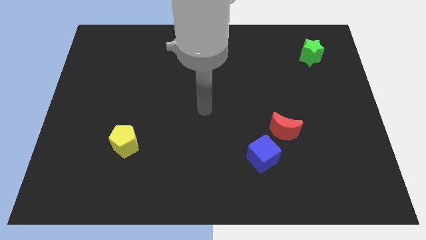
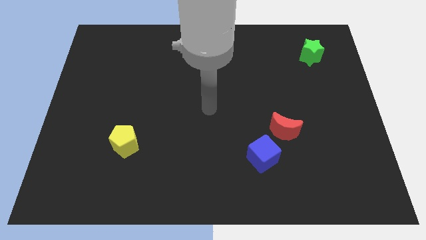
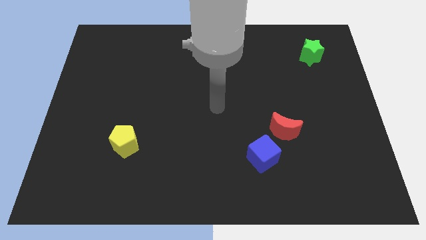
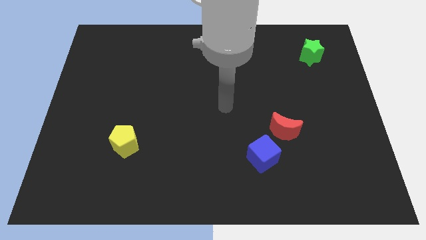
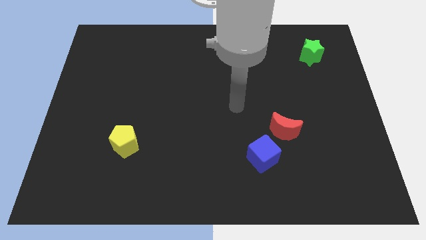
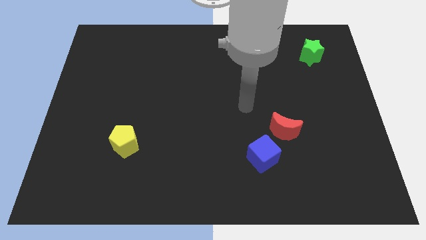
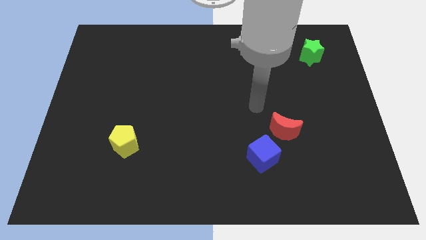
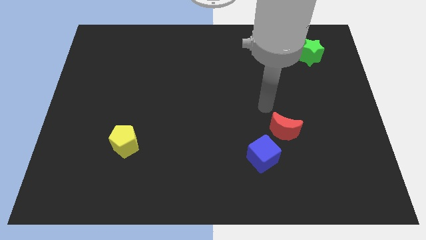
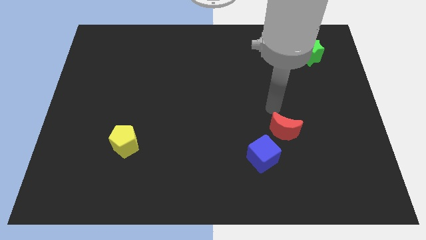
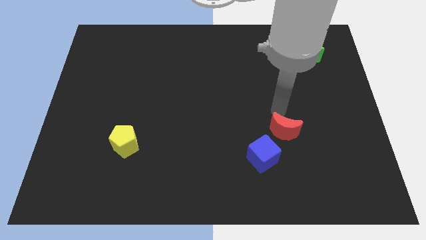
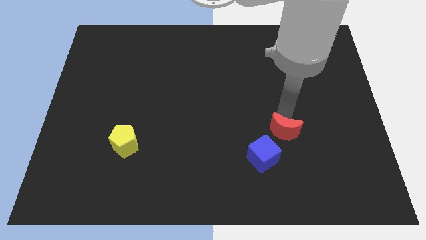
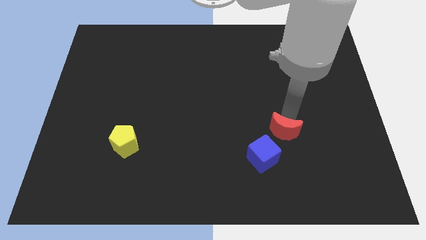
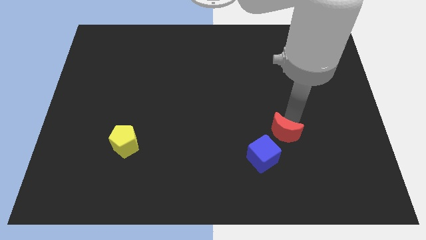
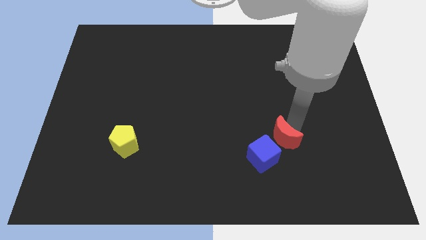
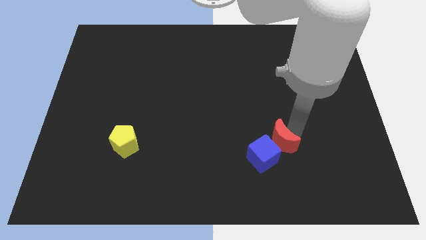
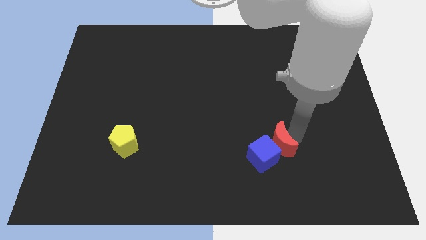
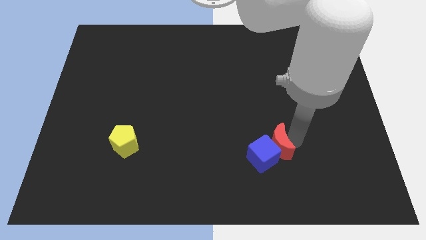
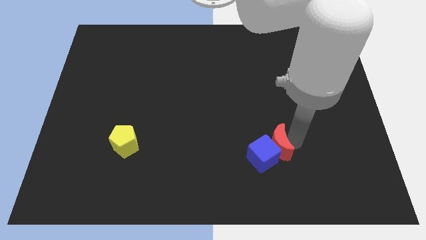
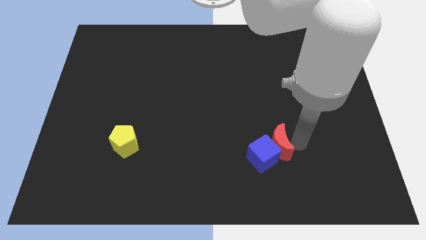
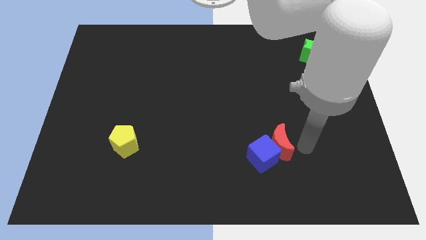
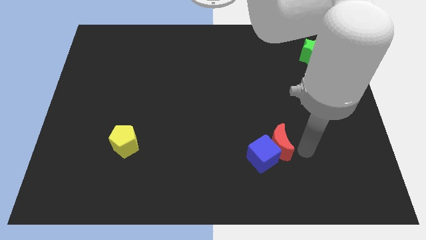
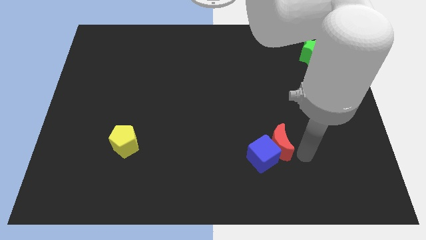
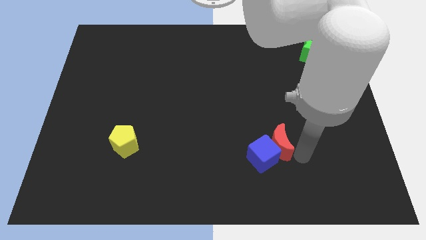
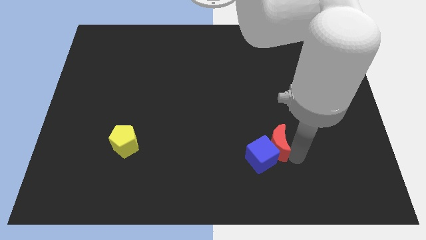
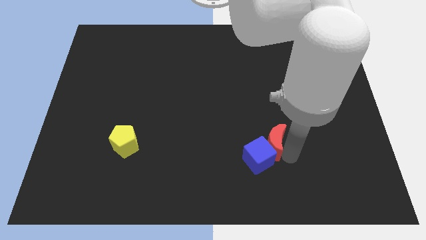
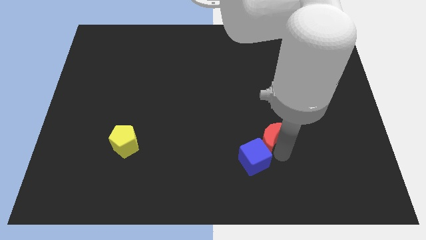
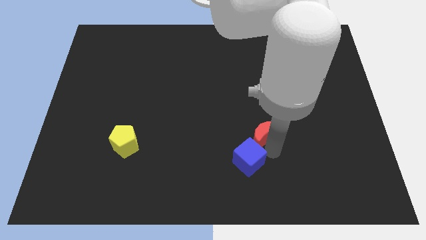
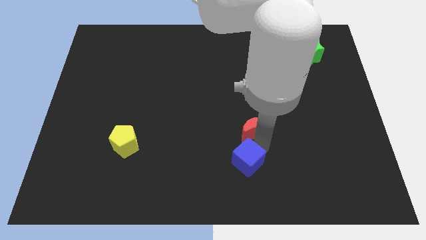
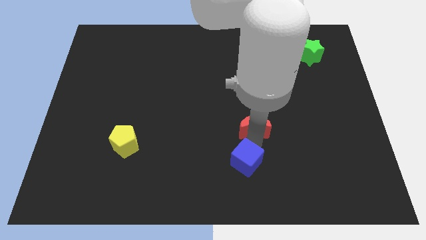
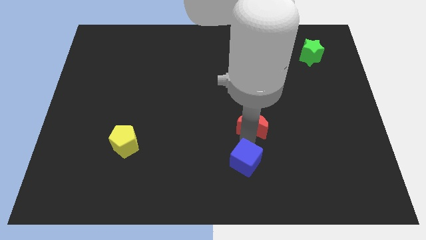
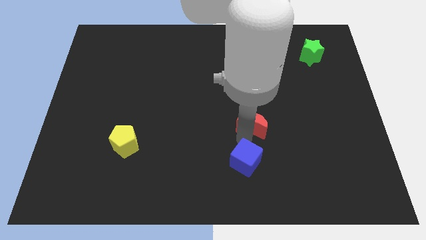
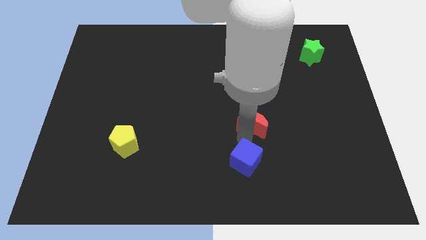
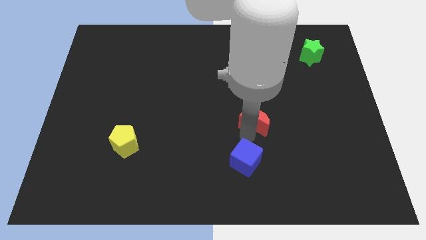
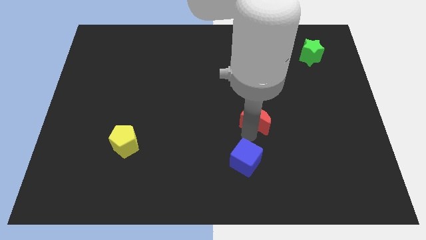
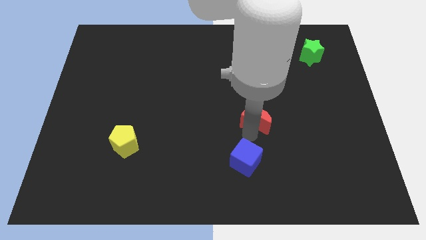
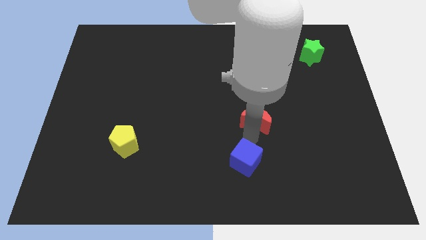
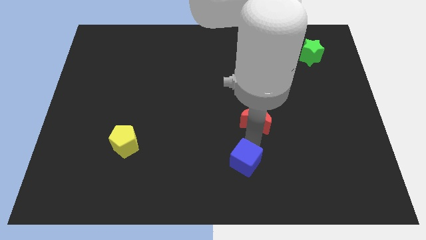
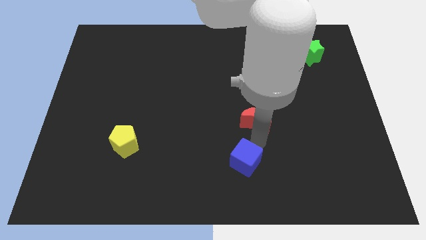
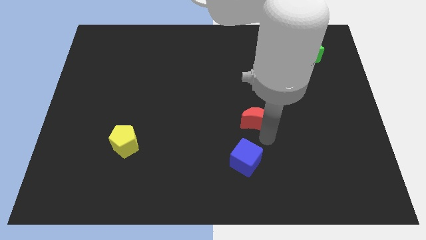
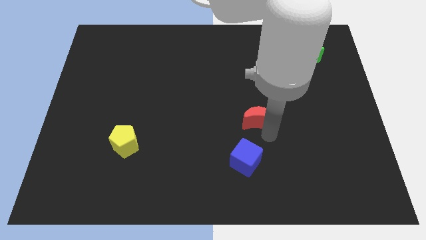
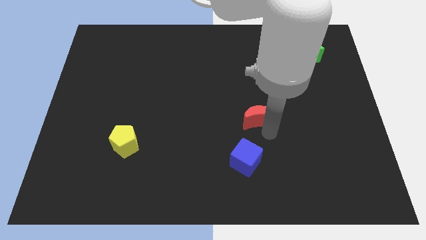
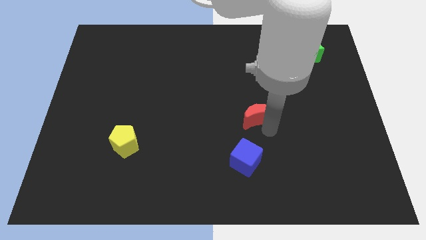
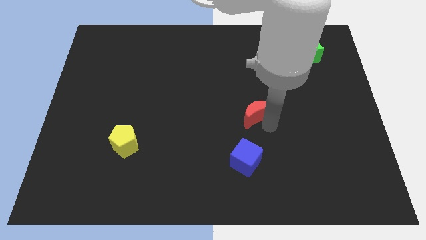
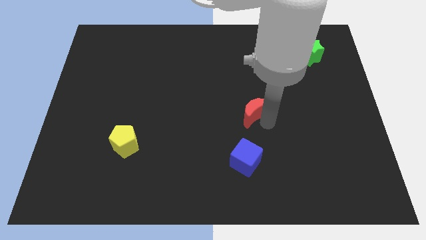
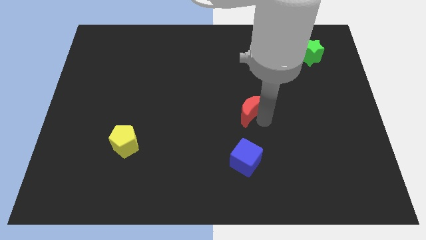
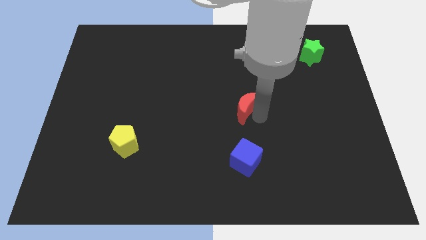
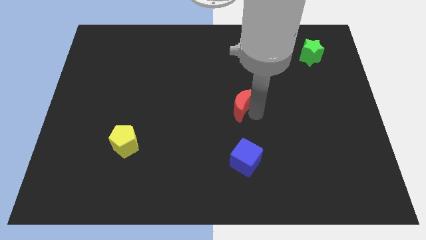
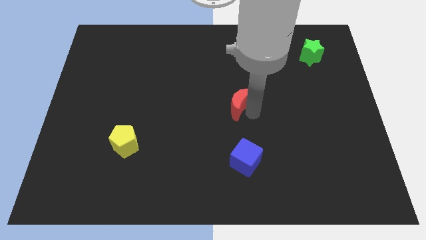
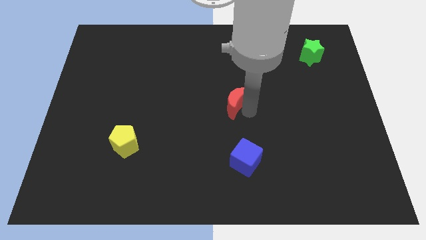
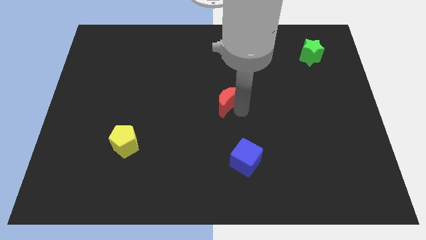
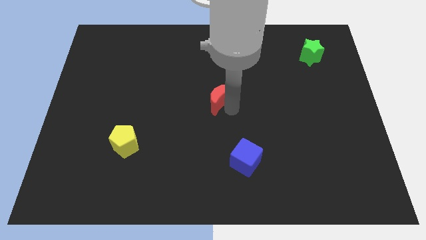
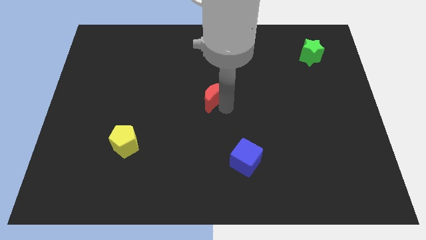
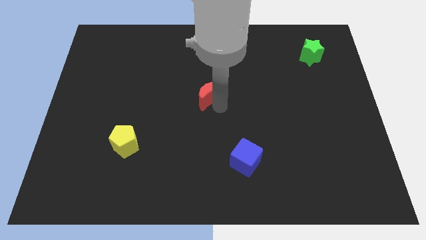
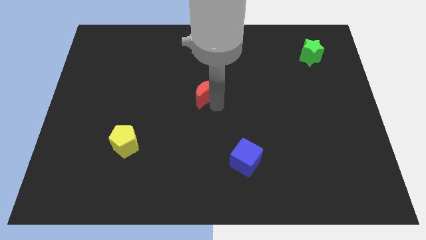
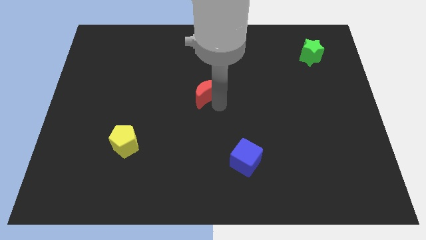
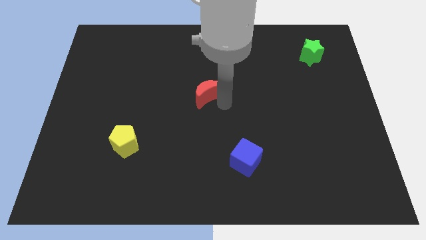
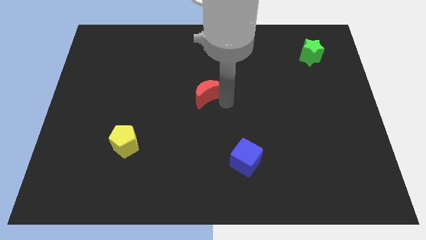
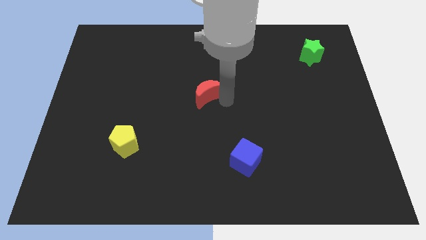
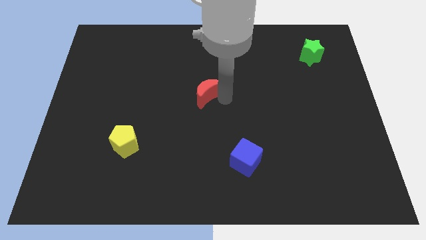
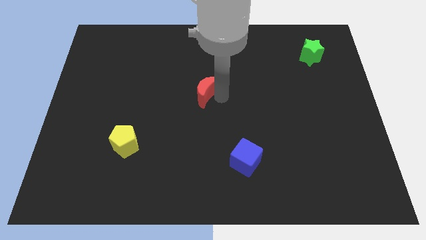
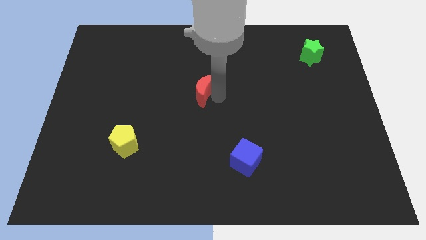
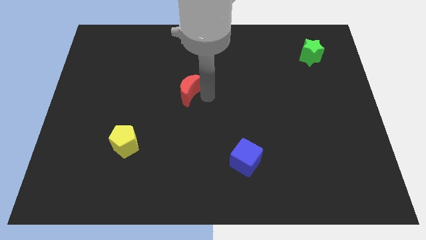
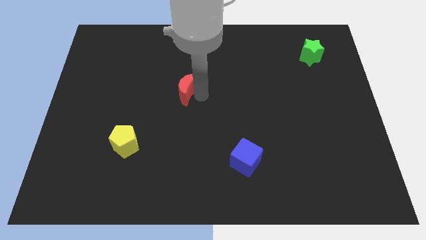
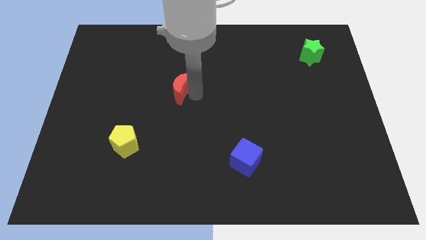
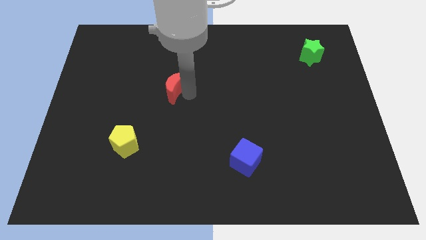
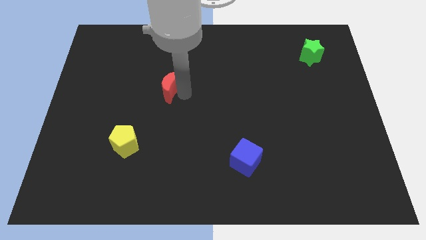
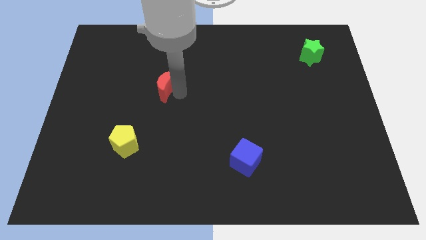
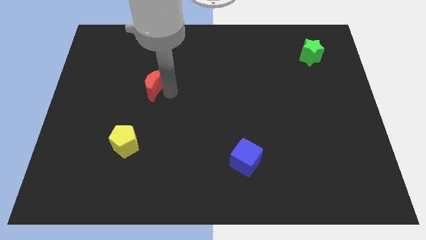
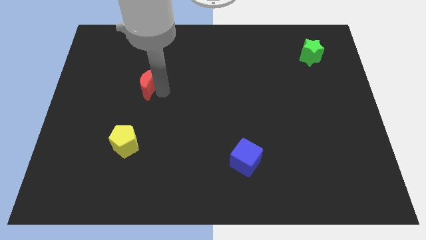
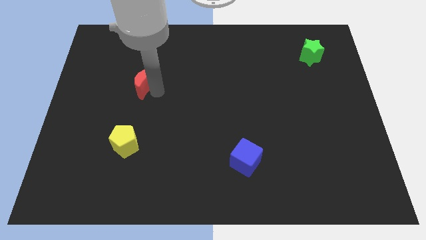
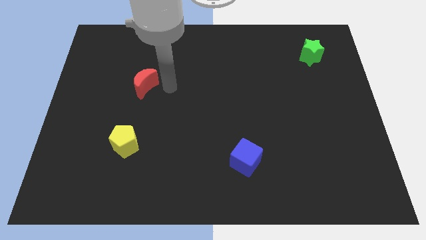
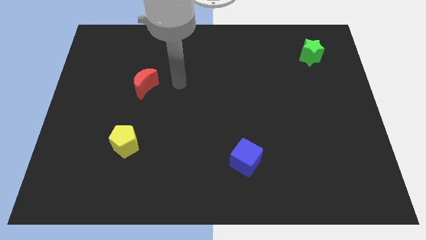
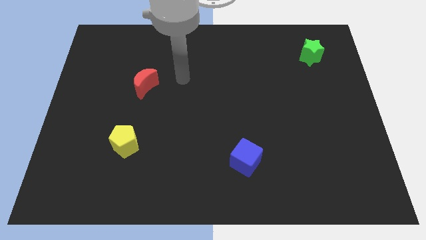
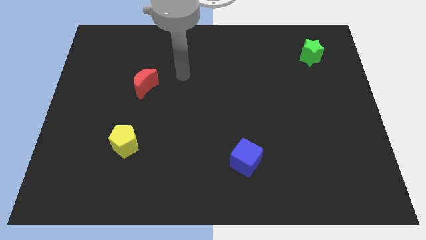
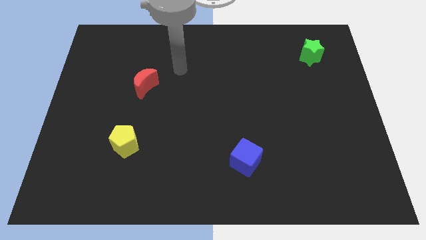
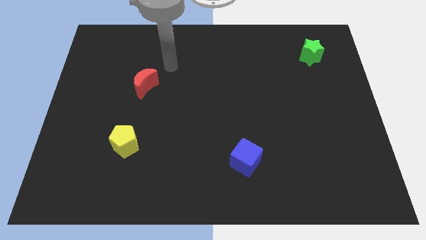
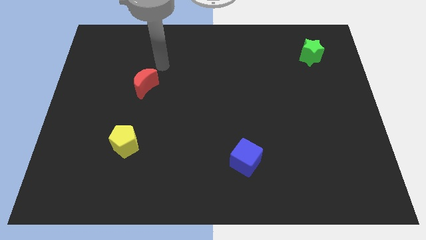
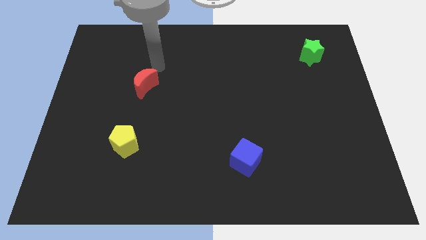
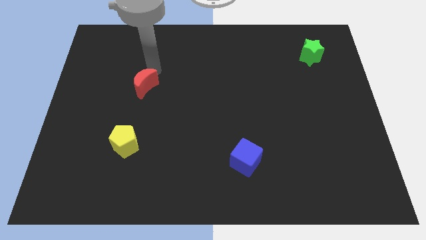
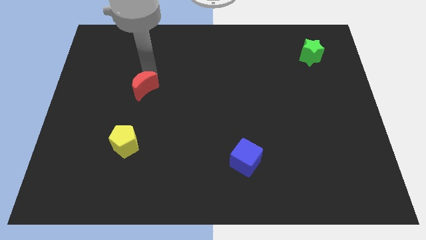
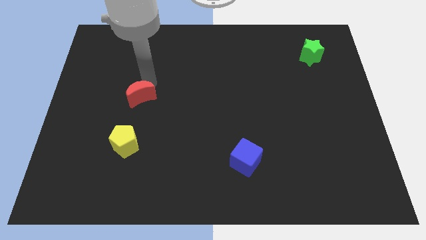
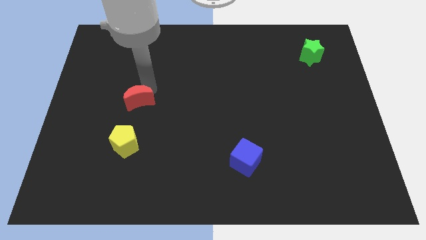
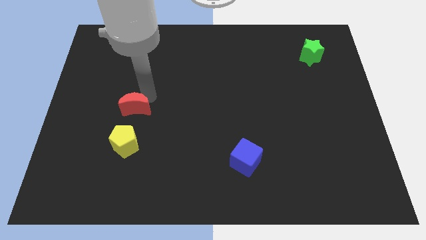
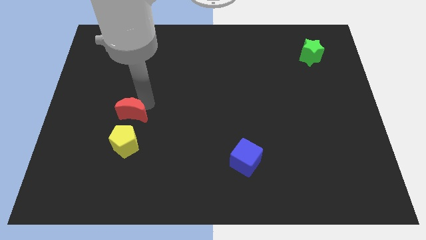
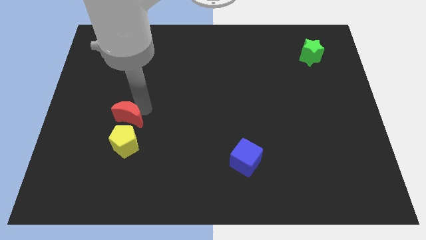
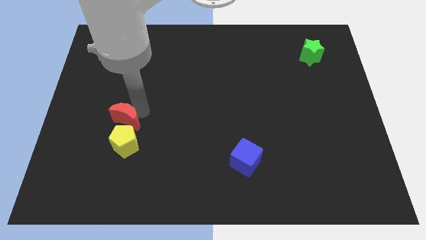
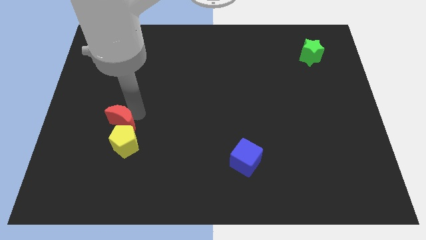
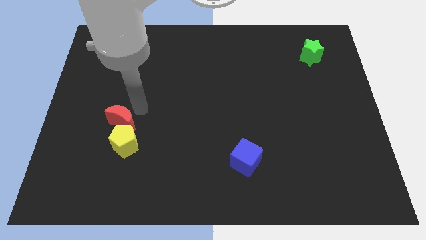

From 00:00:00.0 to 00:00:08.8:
slide the moon towards the yellow pentagon
